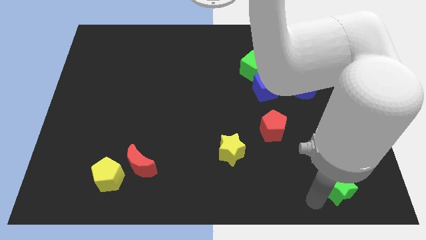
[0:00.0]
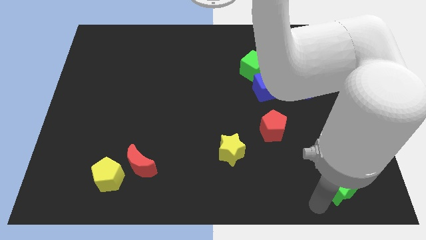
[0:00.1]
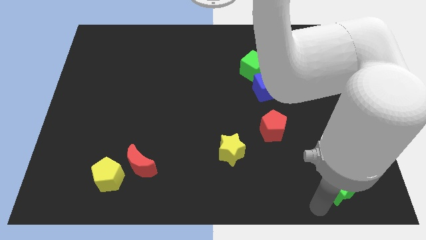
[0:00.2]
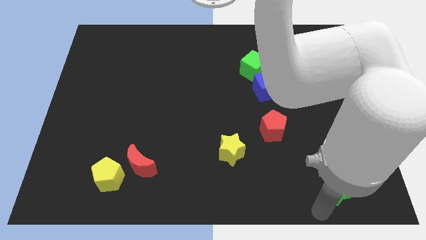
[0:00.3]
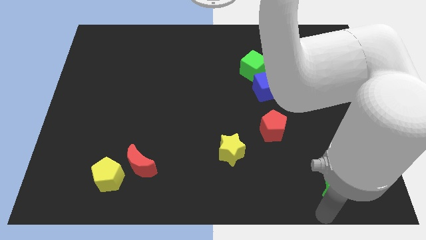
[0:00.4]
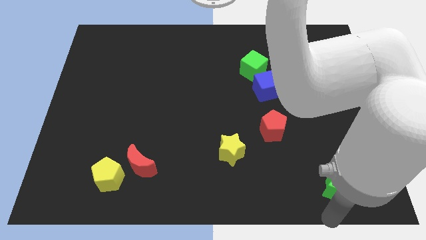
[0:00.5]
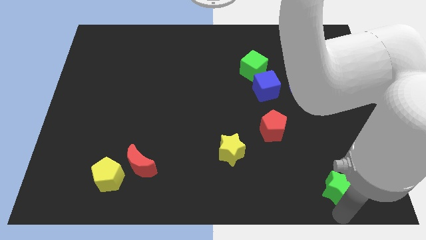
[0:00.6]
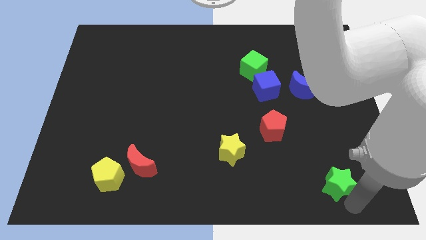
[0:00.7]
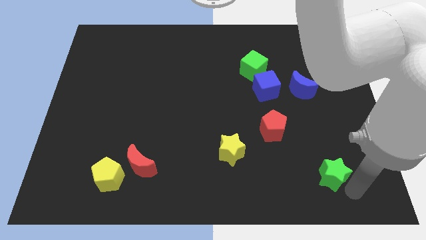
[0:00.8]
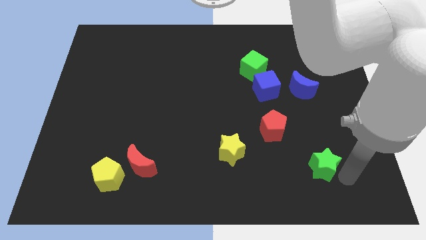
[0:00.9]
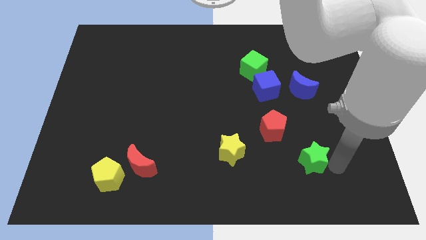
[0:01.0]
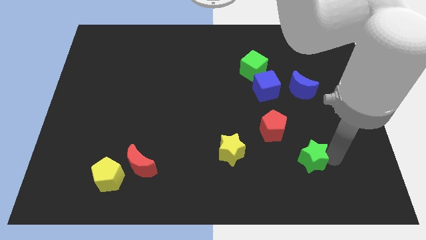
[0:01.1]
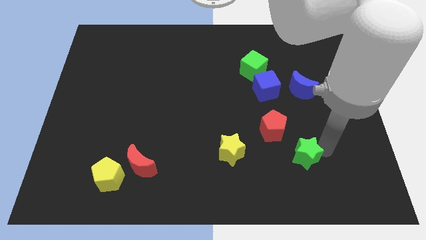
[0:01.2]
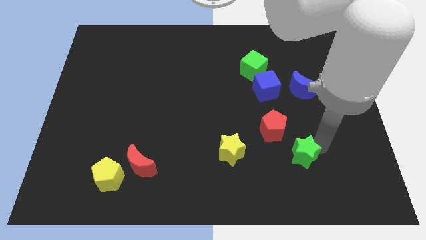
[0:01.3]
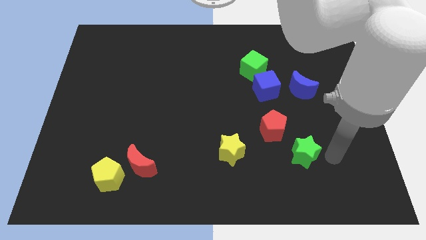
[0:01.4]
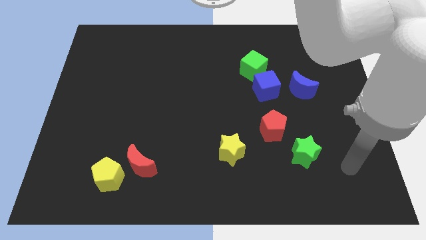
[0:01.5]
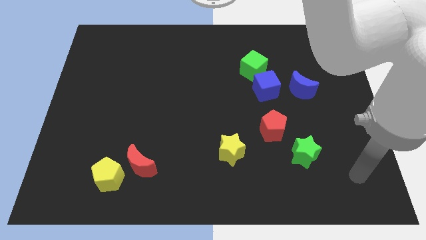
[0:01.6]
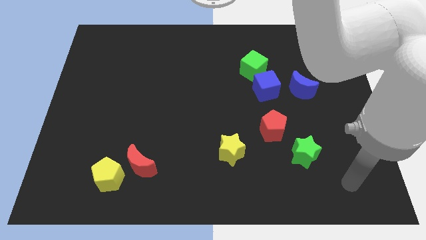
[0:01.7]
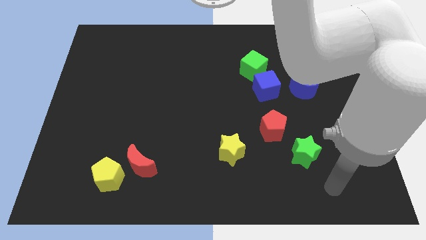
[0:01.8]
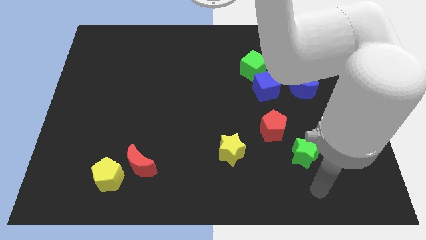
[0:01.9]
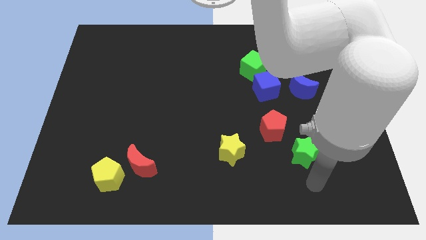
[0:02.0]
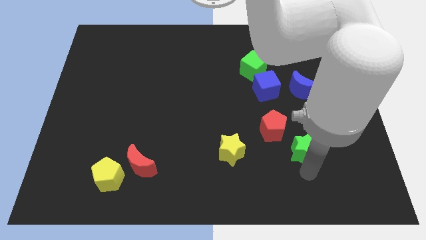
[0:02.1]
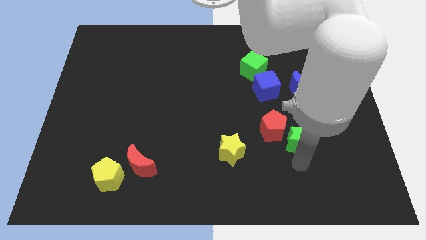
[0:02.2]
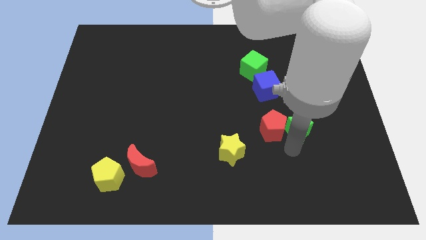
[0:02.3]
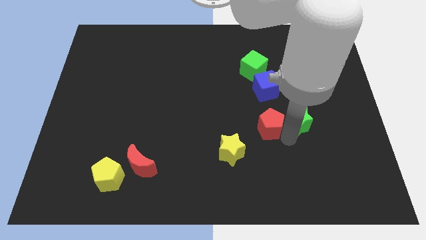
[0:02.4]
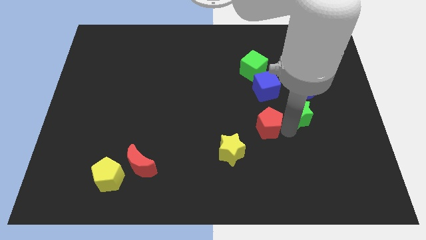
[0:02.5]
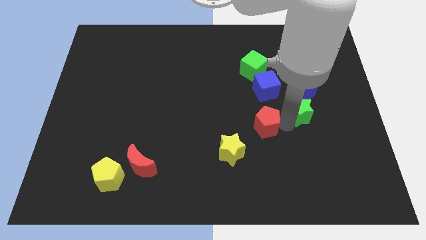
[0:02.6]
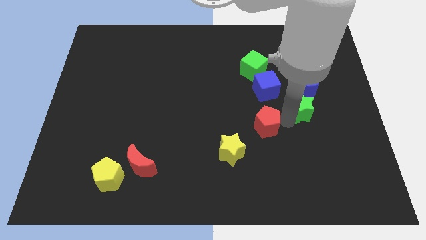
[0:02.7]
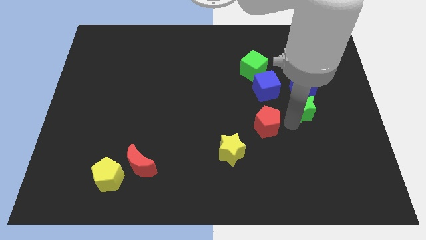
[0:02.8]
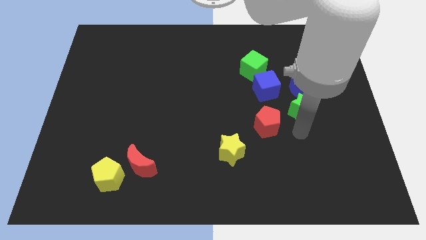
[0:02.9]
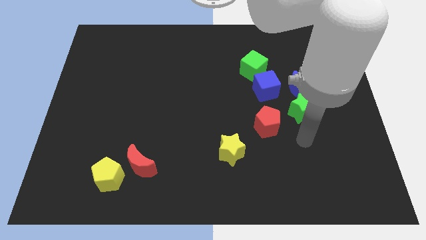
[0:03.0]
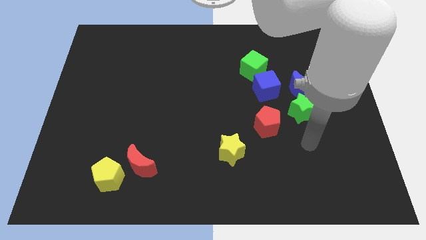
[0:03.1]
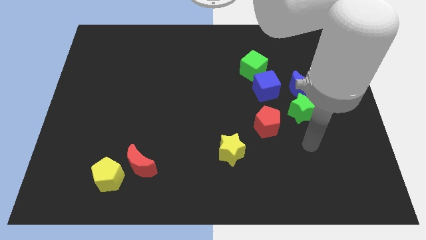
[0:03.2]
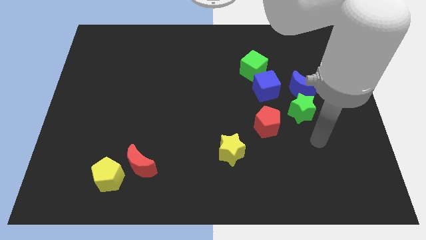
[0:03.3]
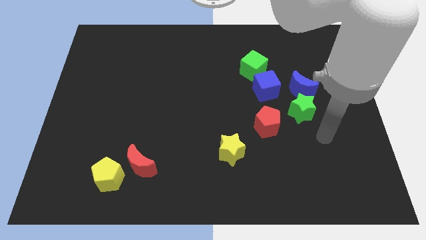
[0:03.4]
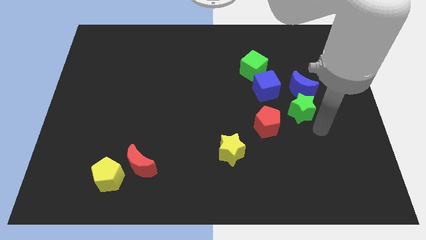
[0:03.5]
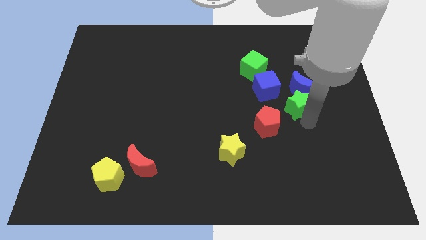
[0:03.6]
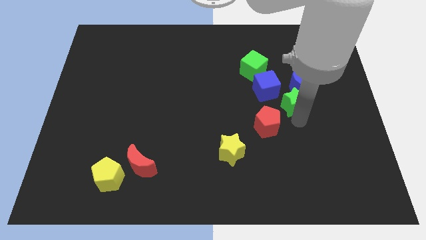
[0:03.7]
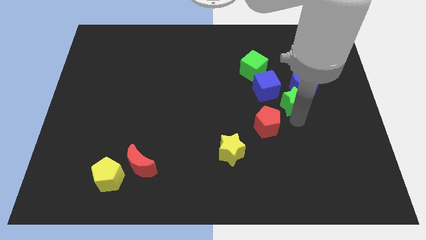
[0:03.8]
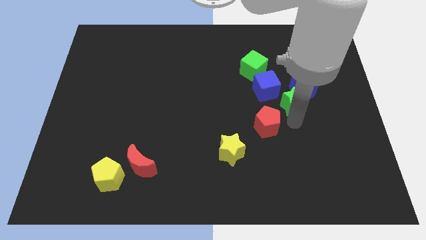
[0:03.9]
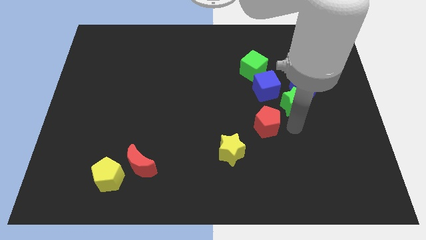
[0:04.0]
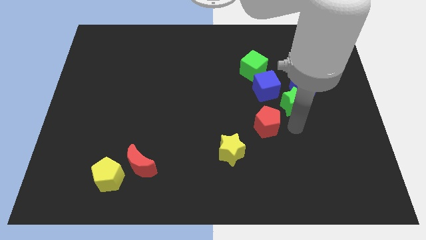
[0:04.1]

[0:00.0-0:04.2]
place the green star between the red pentagon and blue moon

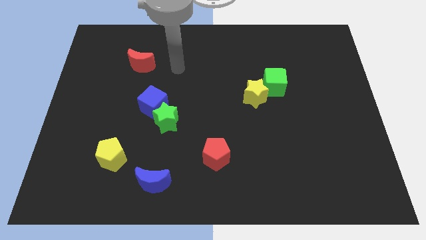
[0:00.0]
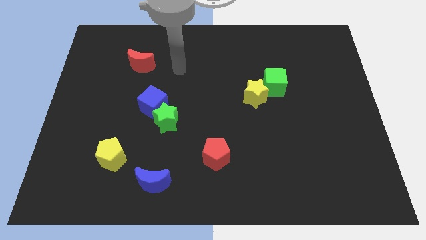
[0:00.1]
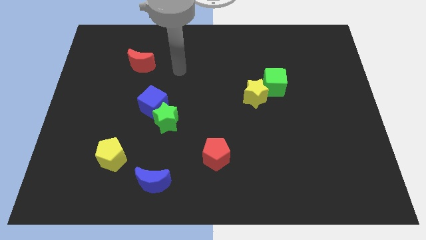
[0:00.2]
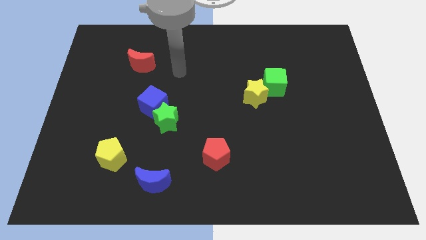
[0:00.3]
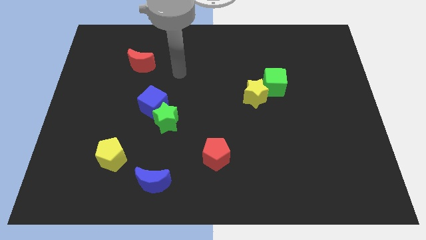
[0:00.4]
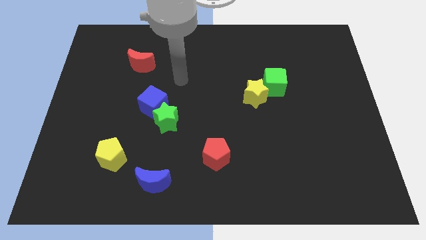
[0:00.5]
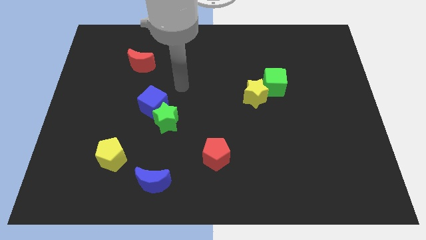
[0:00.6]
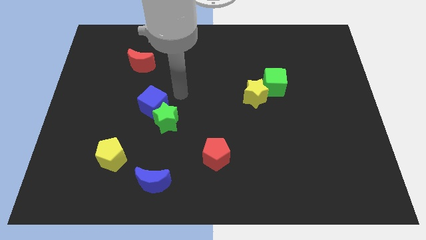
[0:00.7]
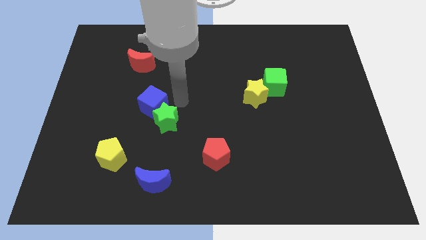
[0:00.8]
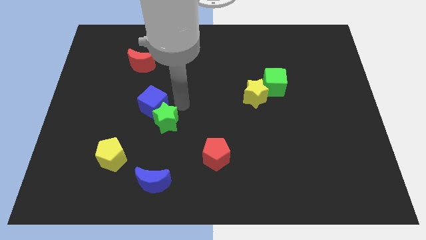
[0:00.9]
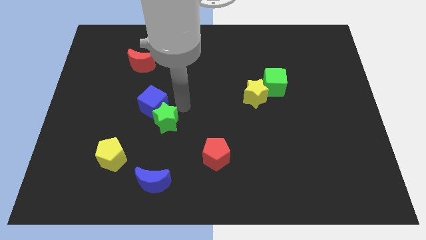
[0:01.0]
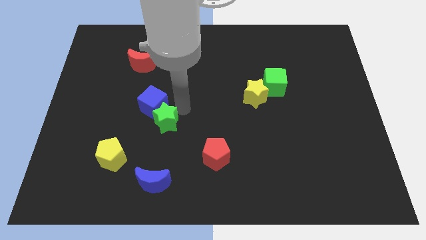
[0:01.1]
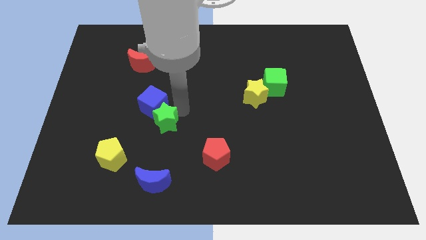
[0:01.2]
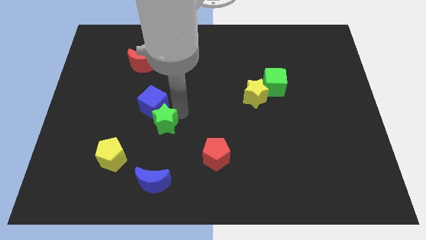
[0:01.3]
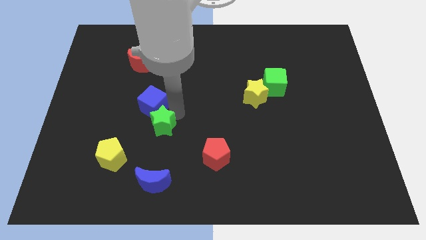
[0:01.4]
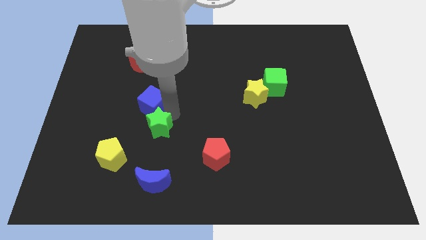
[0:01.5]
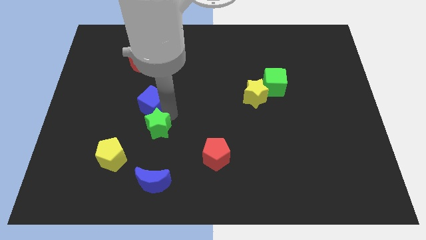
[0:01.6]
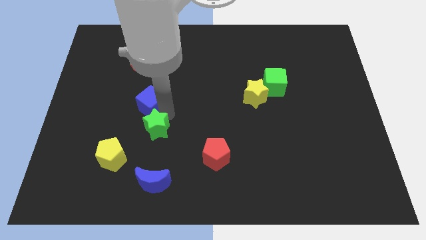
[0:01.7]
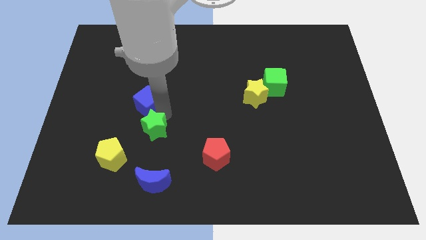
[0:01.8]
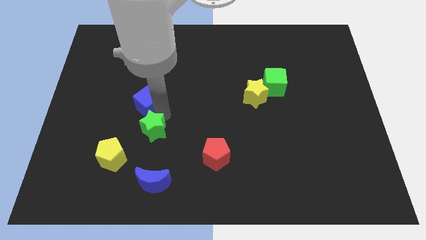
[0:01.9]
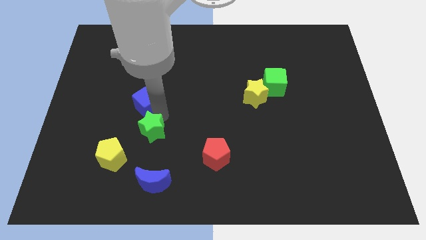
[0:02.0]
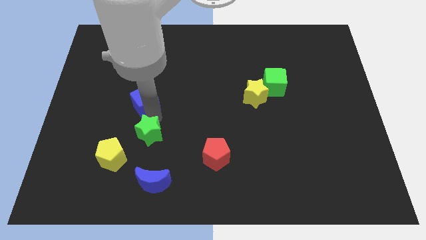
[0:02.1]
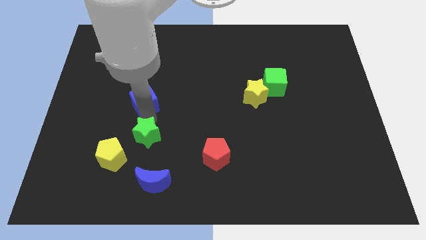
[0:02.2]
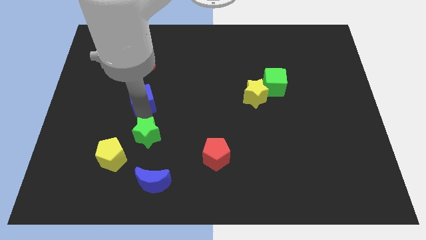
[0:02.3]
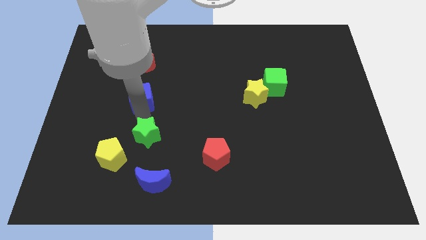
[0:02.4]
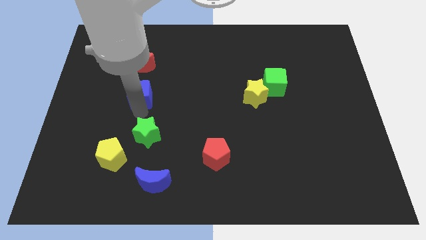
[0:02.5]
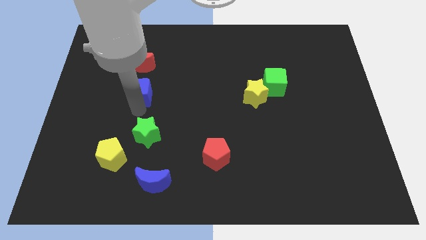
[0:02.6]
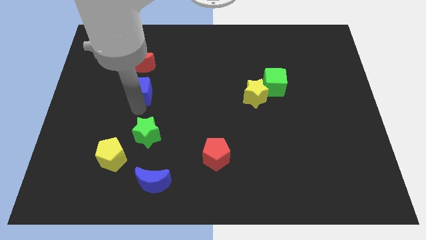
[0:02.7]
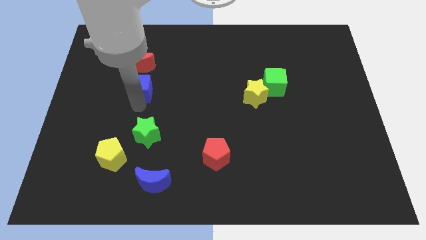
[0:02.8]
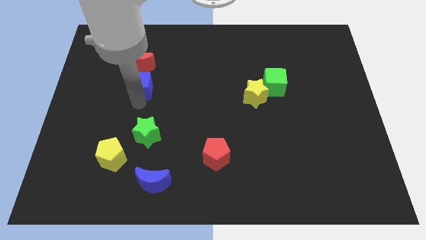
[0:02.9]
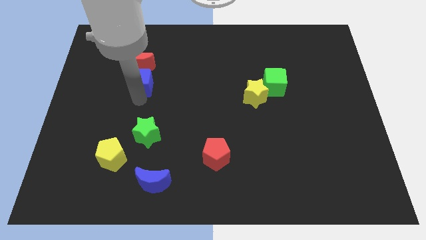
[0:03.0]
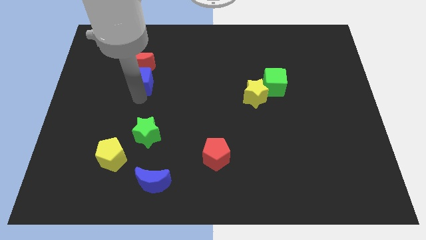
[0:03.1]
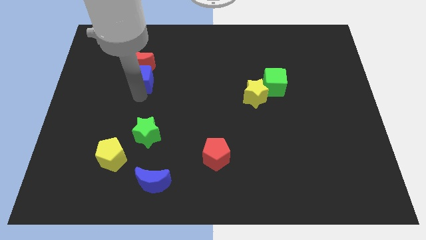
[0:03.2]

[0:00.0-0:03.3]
place the green star diagonally top right to the yellow pentagon

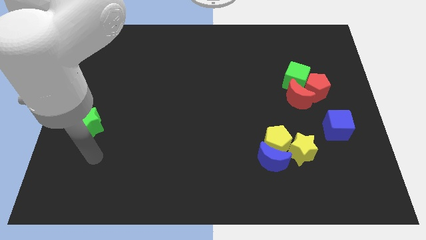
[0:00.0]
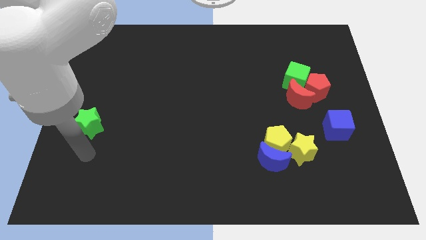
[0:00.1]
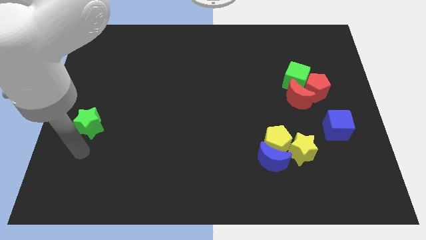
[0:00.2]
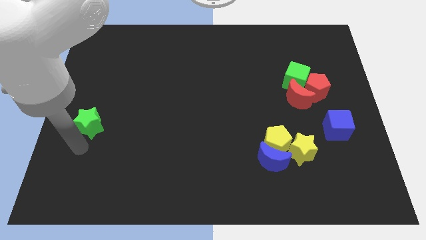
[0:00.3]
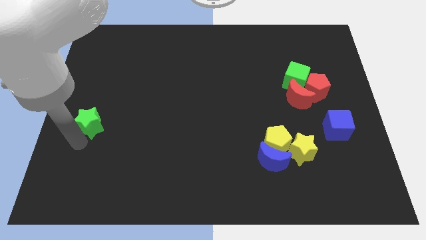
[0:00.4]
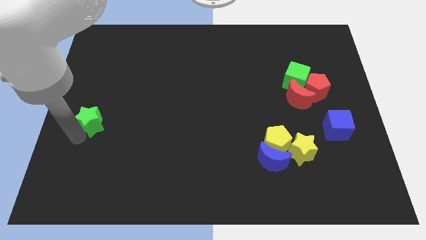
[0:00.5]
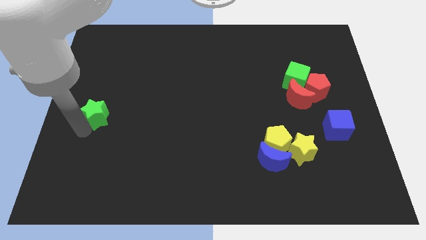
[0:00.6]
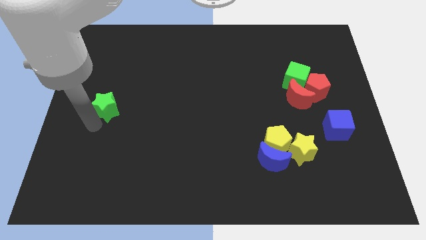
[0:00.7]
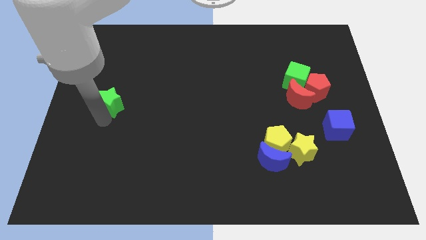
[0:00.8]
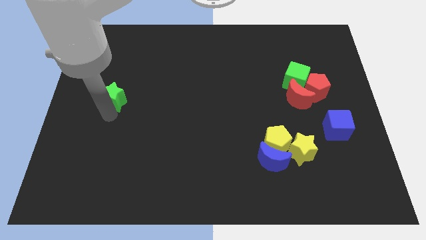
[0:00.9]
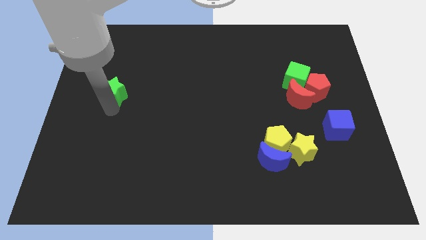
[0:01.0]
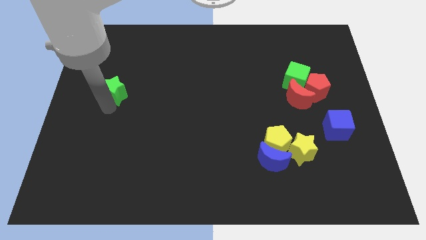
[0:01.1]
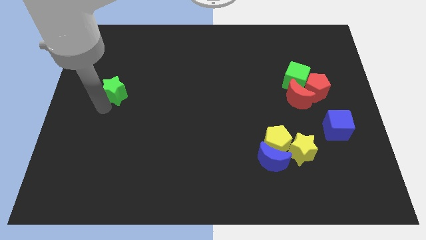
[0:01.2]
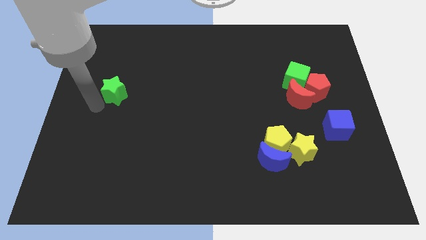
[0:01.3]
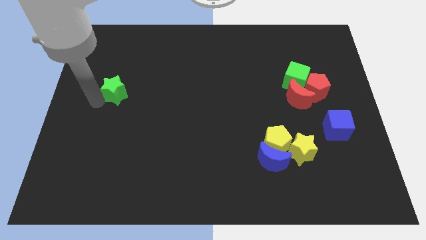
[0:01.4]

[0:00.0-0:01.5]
push the green star towards the left center of the board
